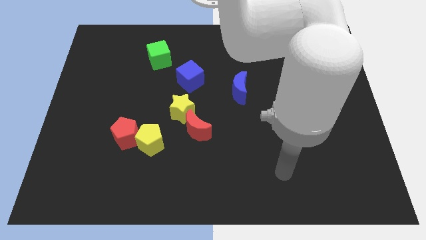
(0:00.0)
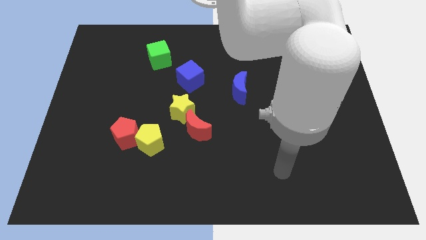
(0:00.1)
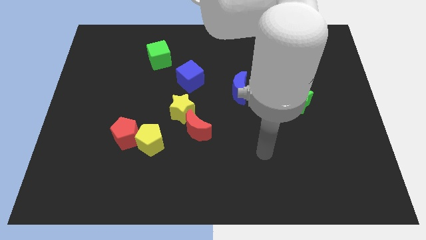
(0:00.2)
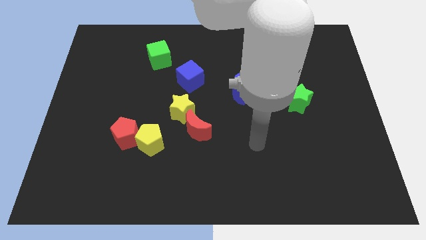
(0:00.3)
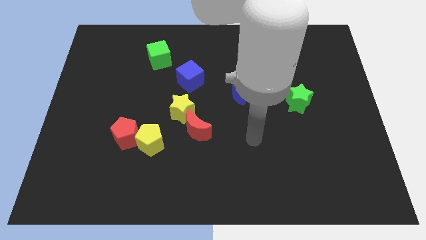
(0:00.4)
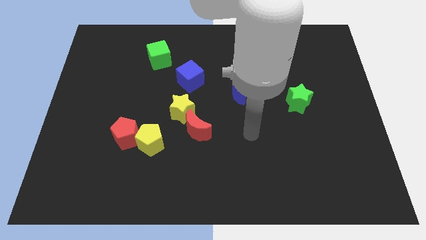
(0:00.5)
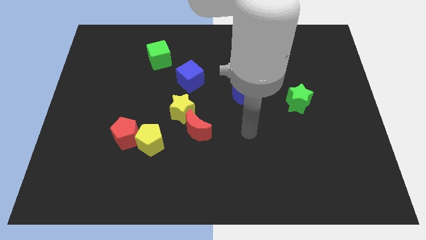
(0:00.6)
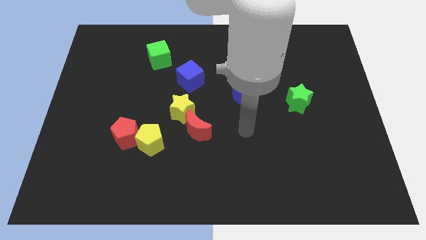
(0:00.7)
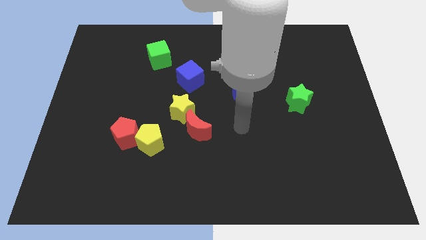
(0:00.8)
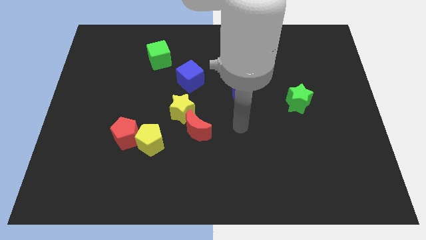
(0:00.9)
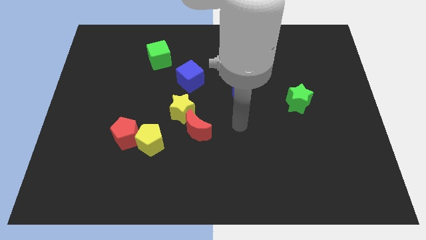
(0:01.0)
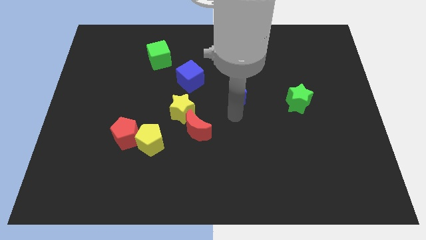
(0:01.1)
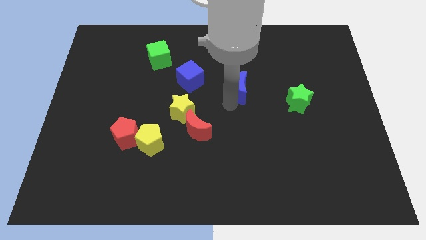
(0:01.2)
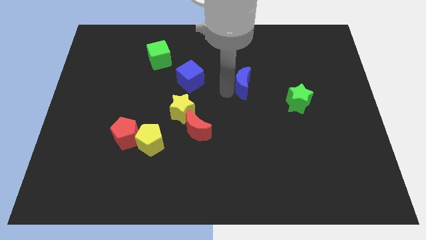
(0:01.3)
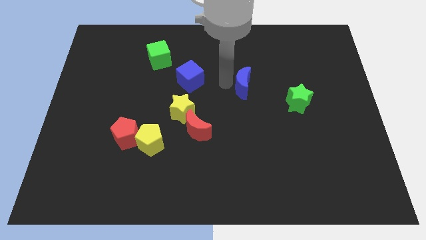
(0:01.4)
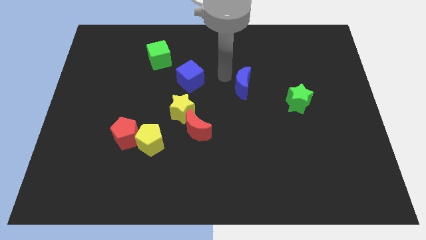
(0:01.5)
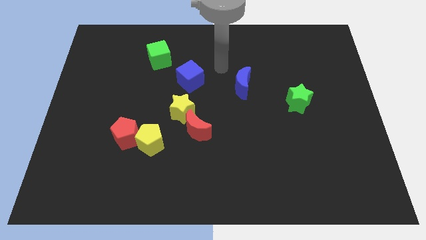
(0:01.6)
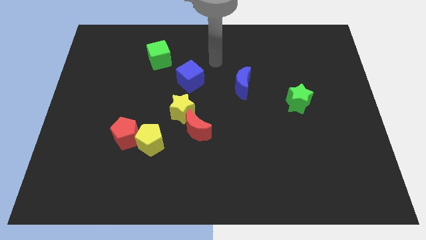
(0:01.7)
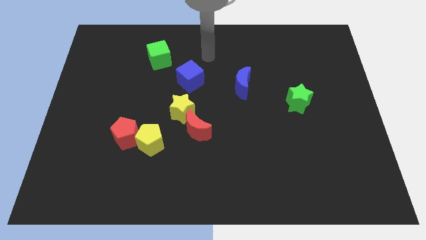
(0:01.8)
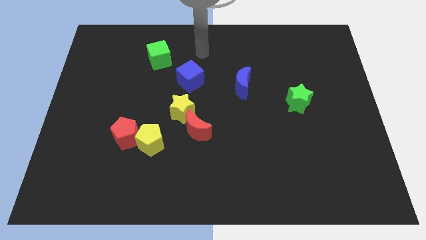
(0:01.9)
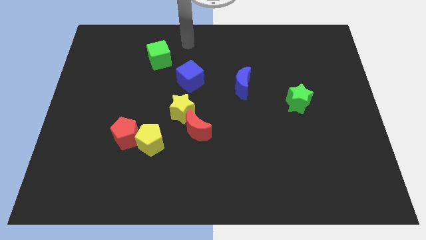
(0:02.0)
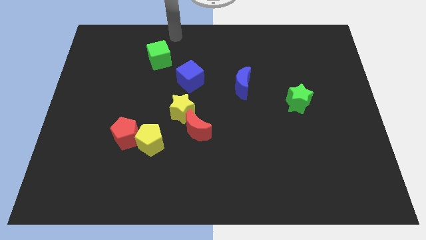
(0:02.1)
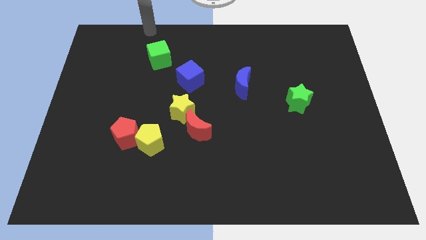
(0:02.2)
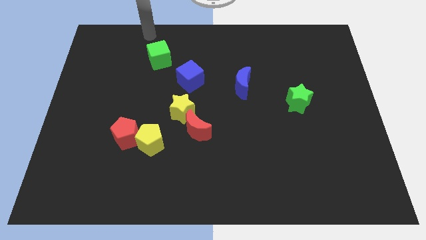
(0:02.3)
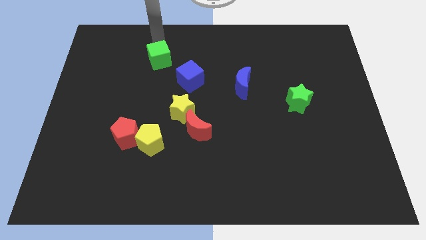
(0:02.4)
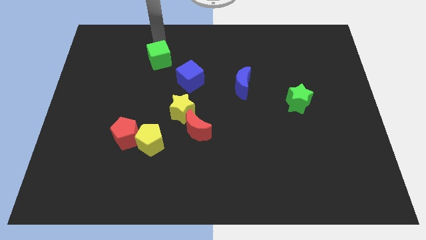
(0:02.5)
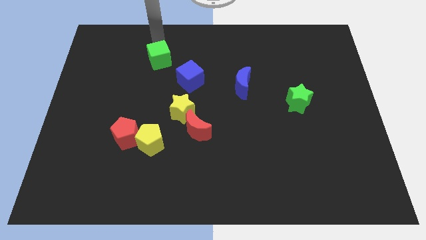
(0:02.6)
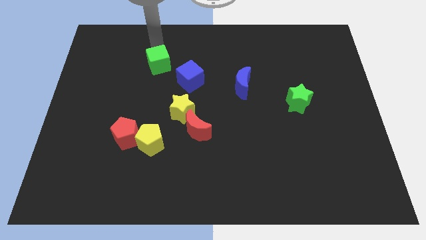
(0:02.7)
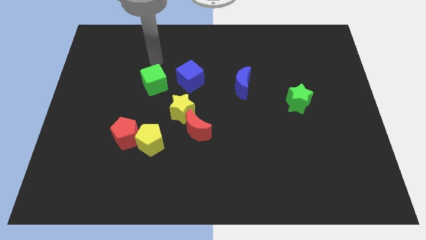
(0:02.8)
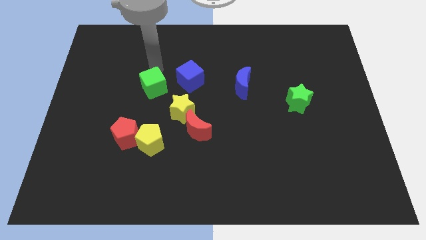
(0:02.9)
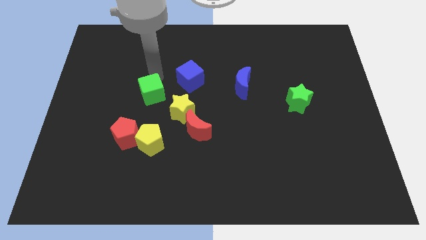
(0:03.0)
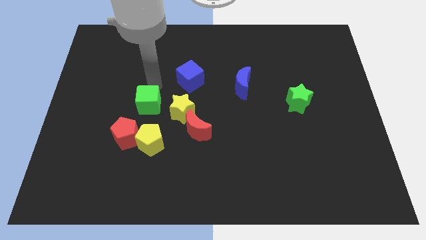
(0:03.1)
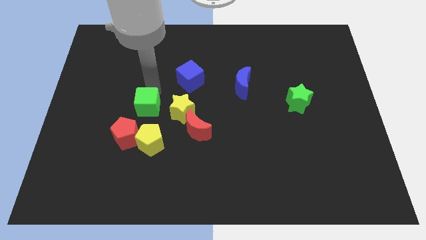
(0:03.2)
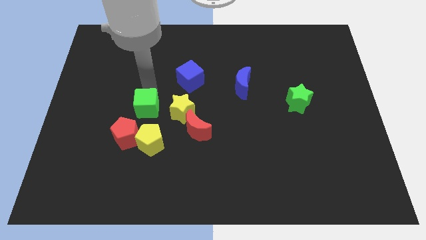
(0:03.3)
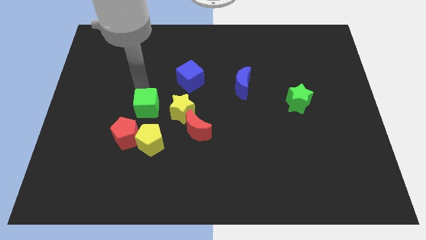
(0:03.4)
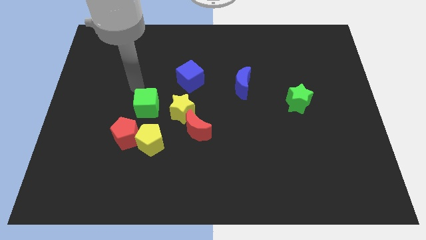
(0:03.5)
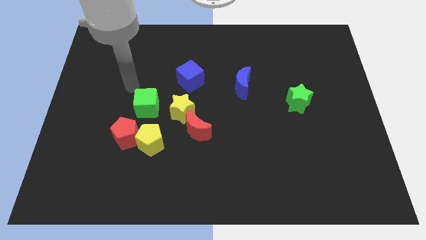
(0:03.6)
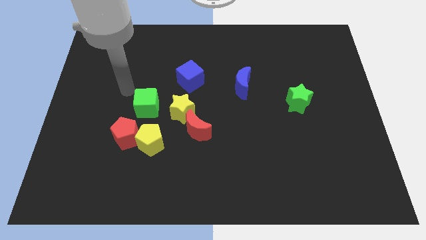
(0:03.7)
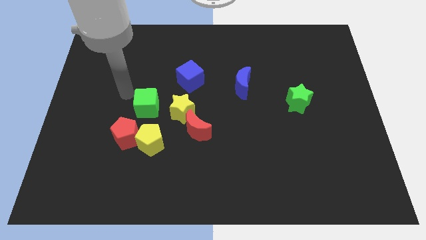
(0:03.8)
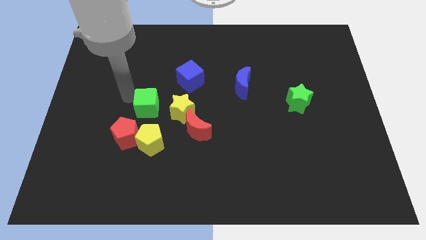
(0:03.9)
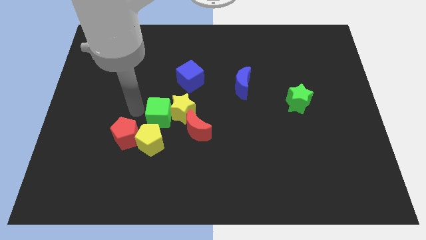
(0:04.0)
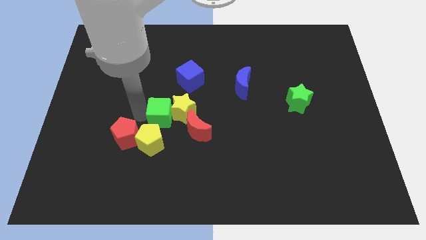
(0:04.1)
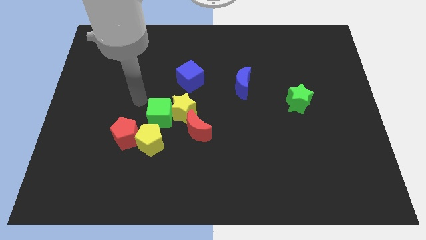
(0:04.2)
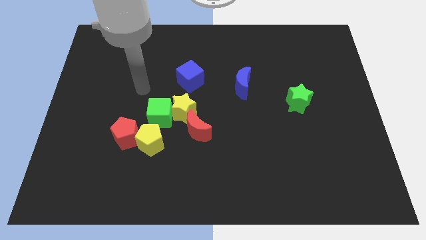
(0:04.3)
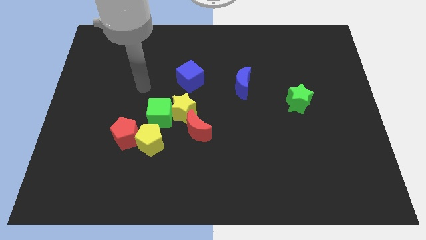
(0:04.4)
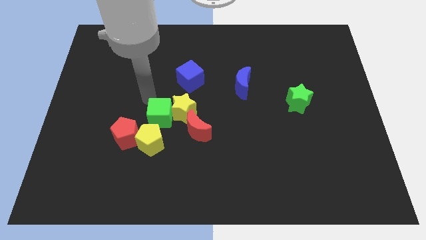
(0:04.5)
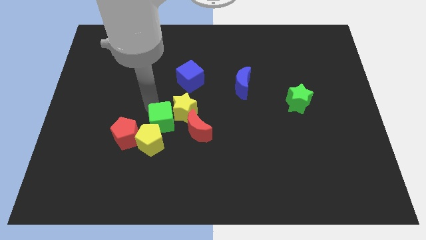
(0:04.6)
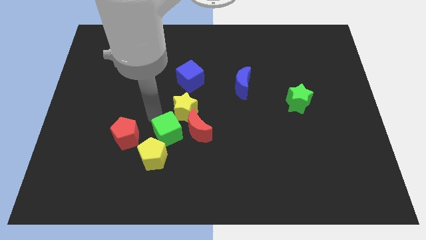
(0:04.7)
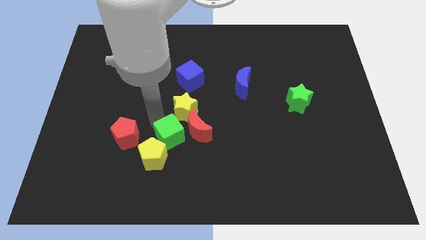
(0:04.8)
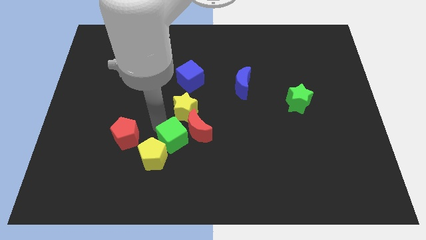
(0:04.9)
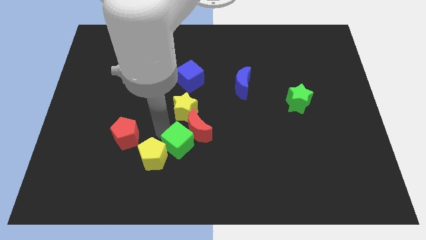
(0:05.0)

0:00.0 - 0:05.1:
slide the green cube close to the red moon

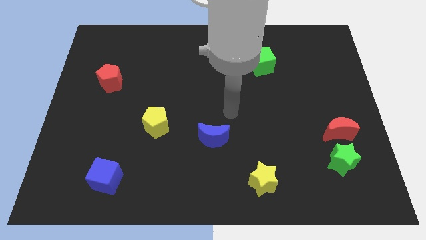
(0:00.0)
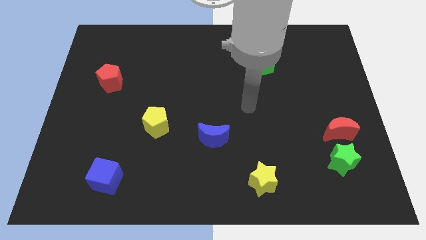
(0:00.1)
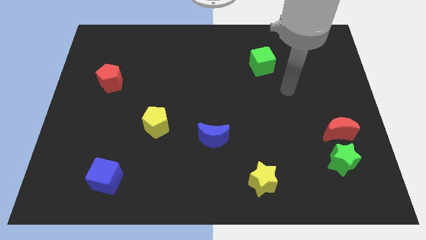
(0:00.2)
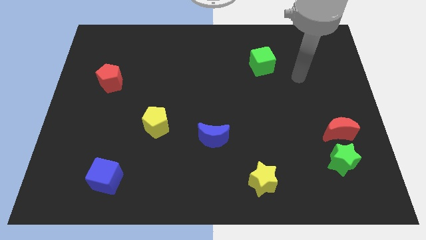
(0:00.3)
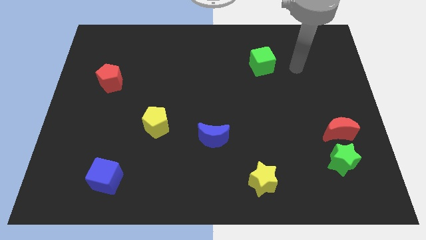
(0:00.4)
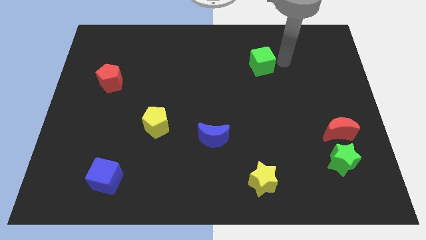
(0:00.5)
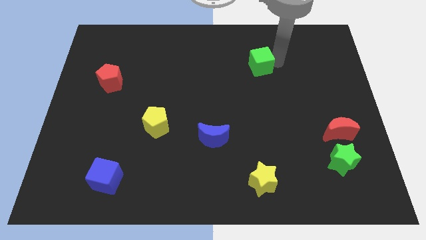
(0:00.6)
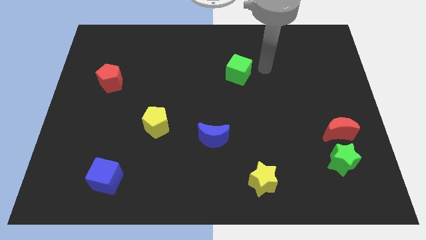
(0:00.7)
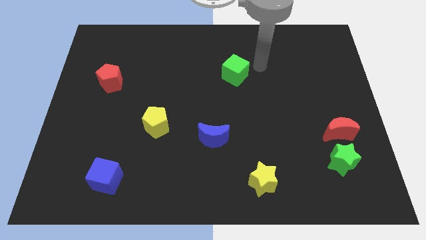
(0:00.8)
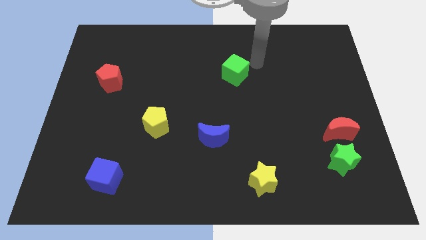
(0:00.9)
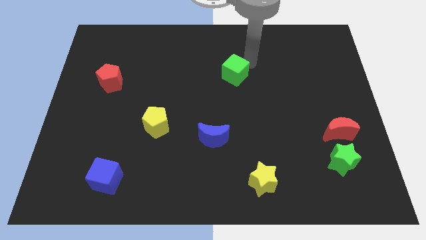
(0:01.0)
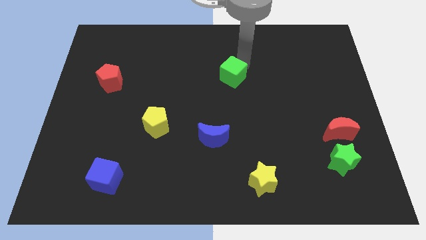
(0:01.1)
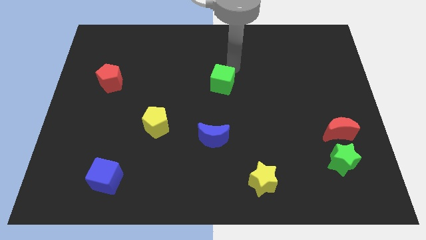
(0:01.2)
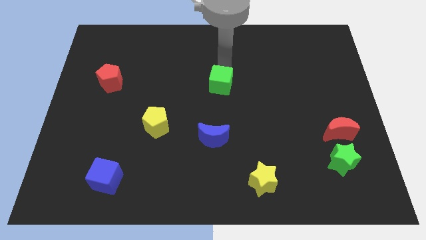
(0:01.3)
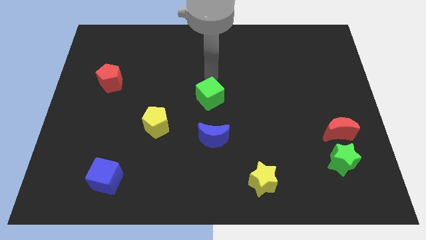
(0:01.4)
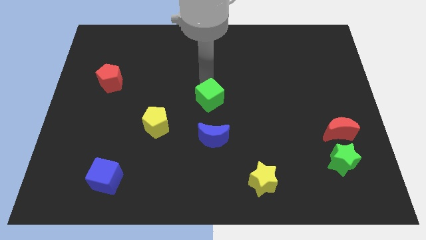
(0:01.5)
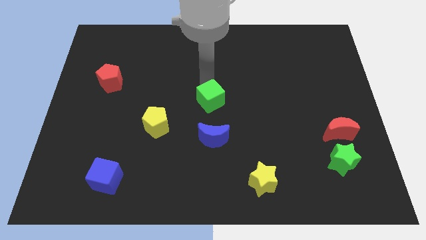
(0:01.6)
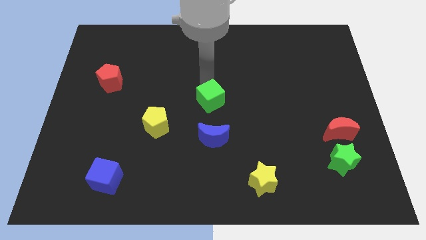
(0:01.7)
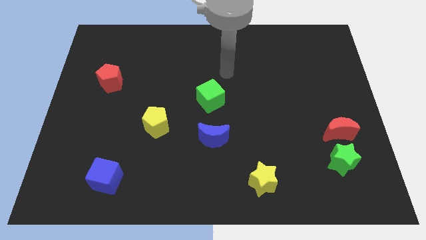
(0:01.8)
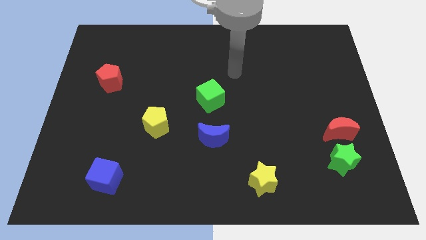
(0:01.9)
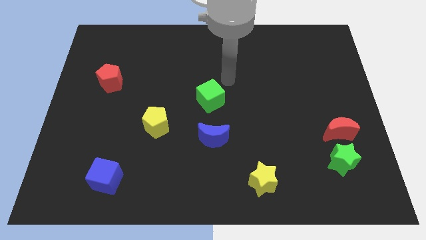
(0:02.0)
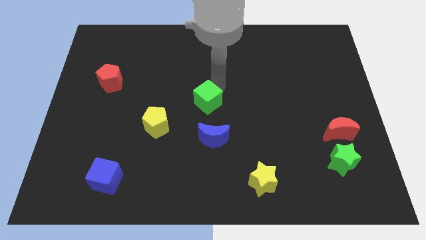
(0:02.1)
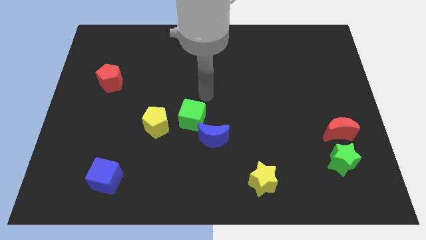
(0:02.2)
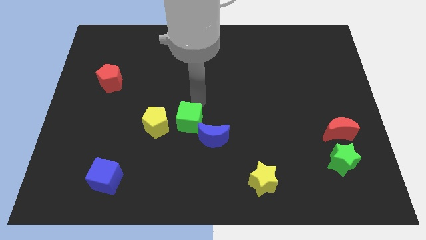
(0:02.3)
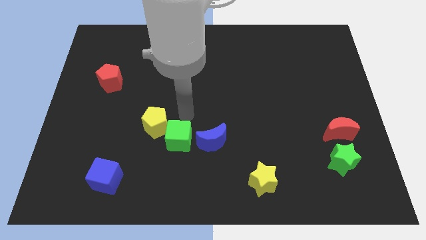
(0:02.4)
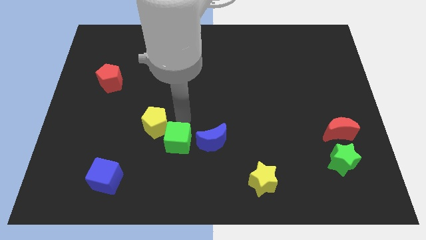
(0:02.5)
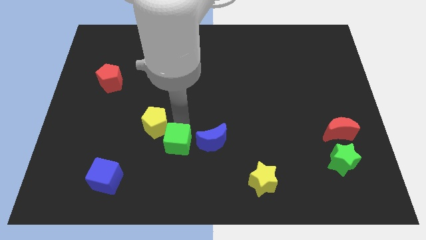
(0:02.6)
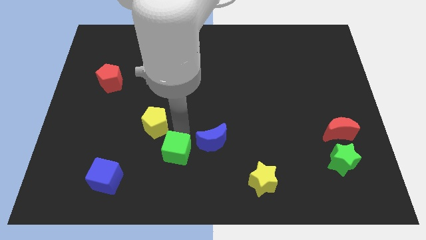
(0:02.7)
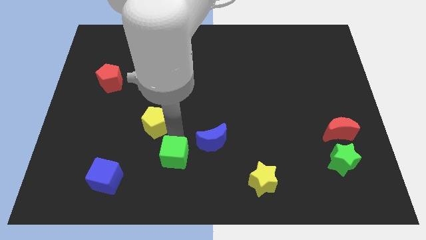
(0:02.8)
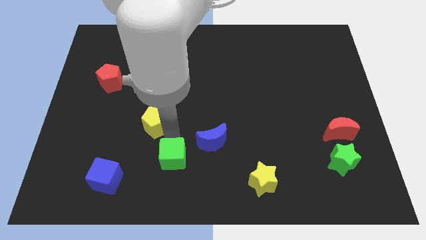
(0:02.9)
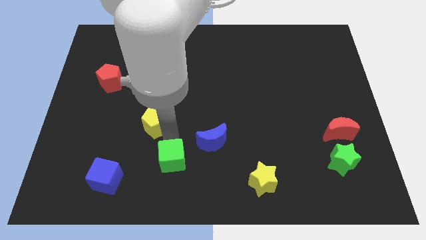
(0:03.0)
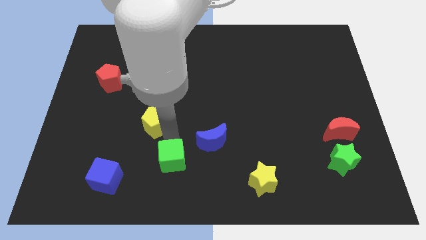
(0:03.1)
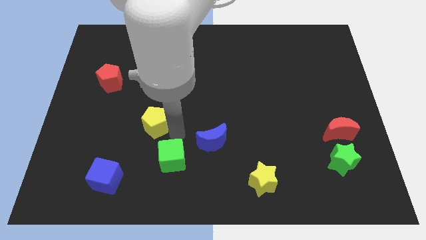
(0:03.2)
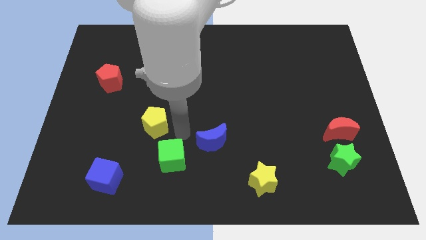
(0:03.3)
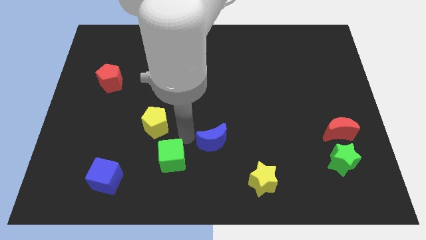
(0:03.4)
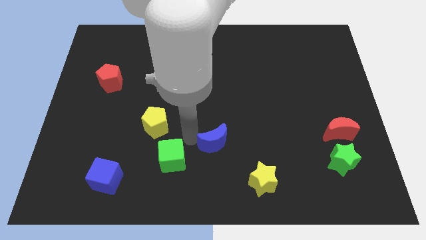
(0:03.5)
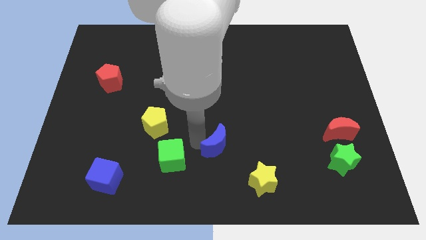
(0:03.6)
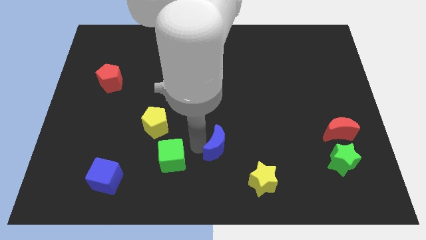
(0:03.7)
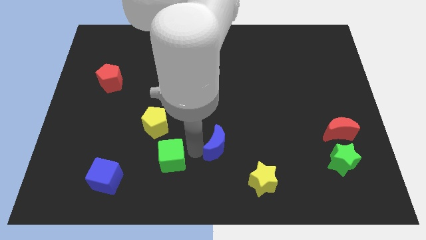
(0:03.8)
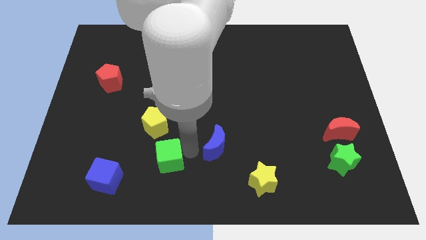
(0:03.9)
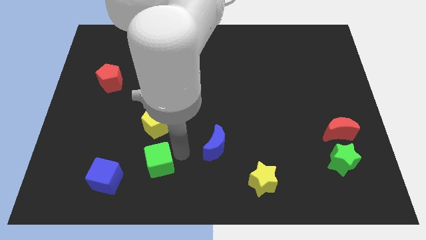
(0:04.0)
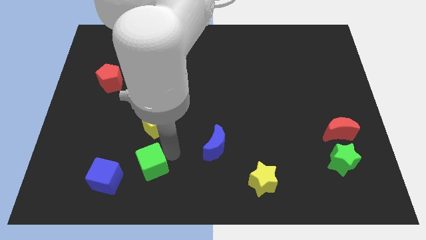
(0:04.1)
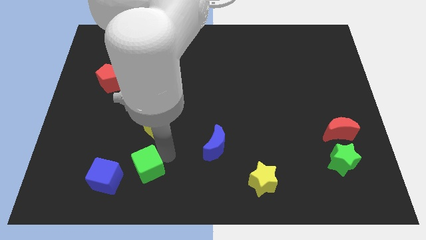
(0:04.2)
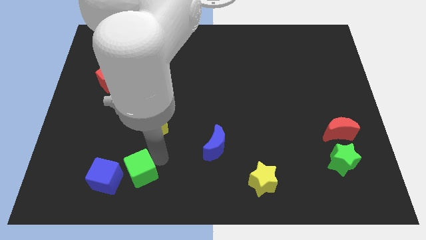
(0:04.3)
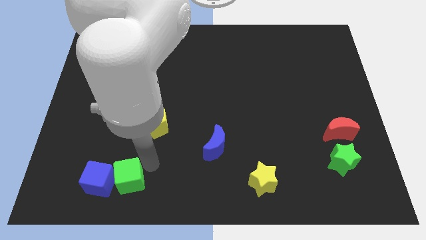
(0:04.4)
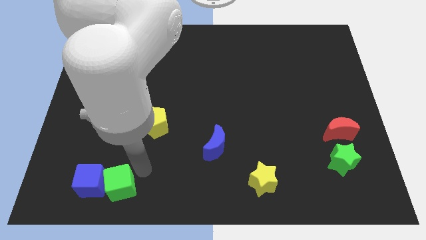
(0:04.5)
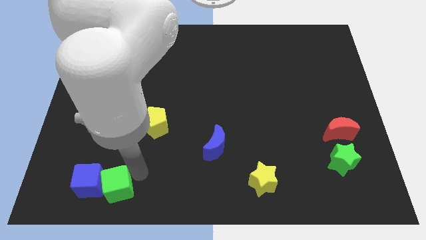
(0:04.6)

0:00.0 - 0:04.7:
put the green cube towards the blue cube
